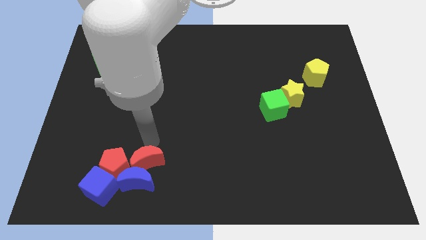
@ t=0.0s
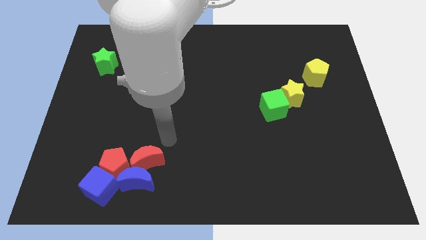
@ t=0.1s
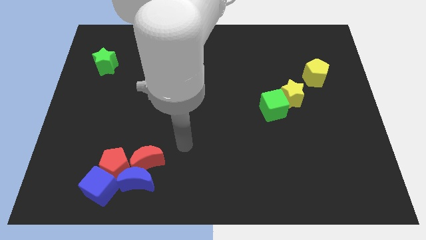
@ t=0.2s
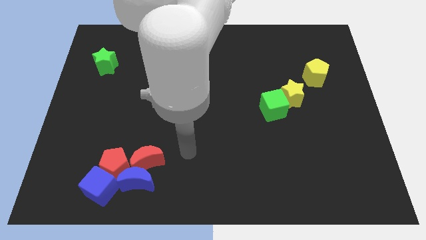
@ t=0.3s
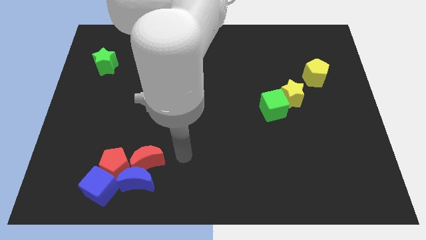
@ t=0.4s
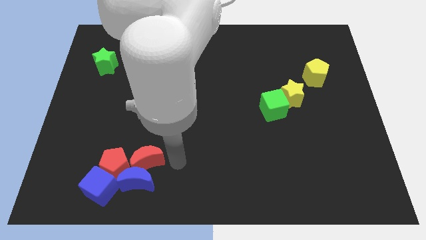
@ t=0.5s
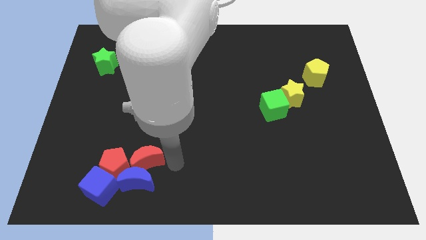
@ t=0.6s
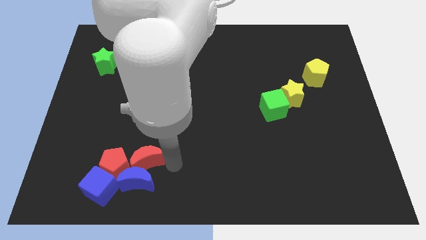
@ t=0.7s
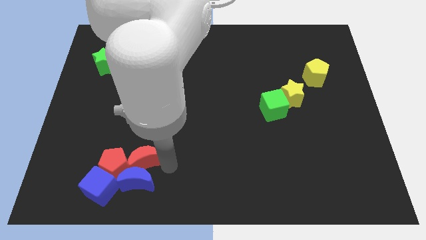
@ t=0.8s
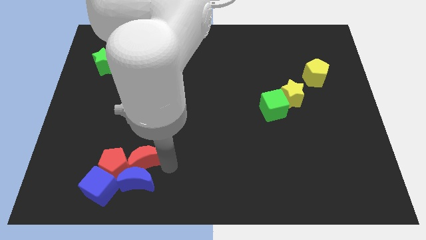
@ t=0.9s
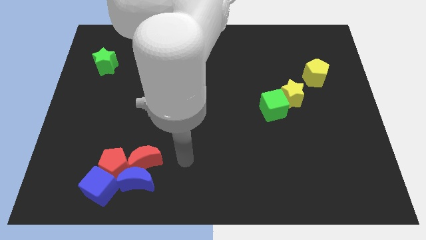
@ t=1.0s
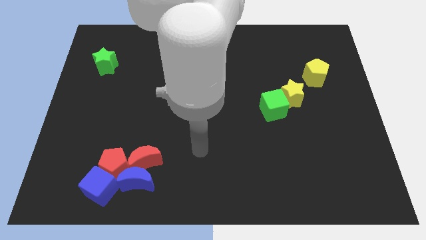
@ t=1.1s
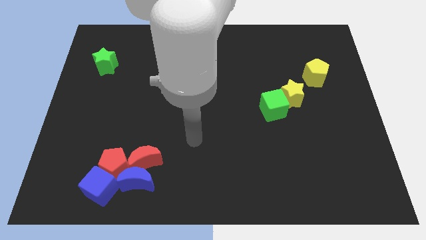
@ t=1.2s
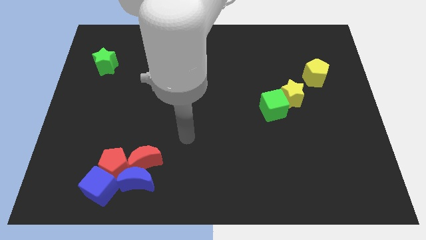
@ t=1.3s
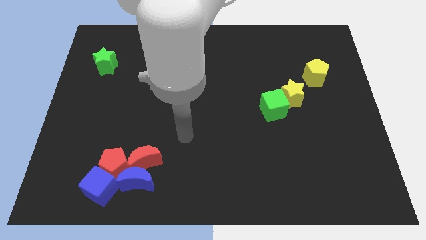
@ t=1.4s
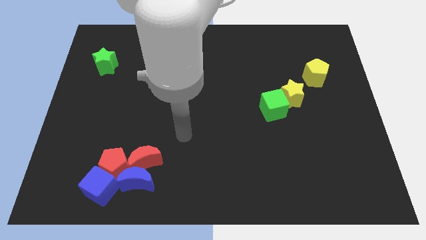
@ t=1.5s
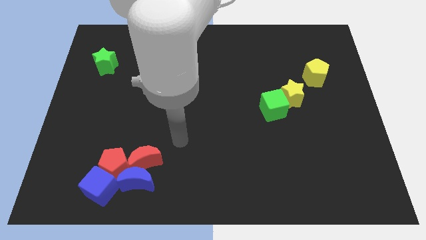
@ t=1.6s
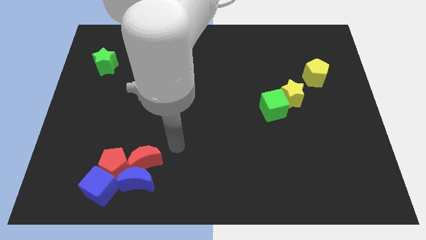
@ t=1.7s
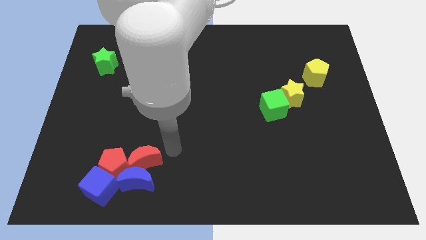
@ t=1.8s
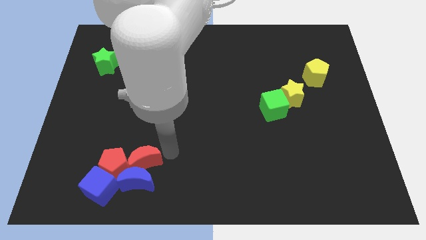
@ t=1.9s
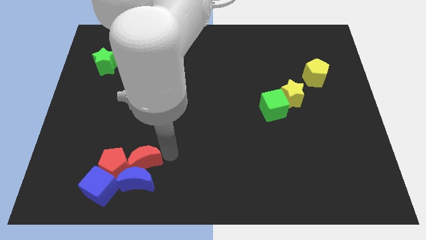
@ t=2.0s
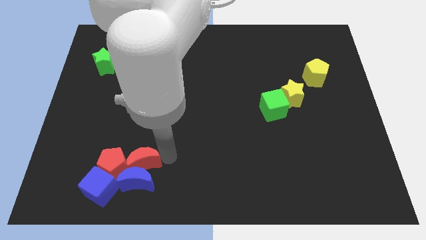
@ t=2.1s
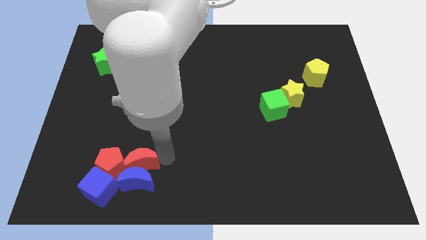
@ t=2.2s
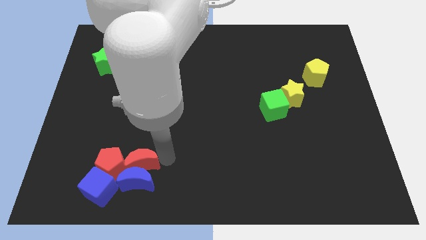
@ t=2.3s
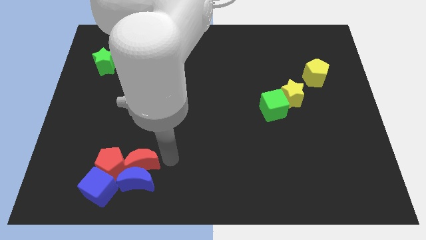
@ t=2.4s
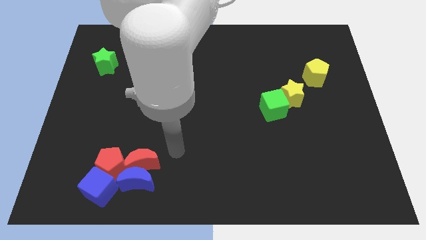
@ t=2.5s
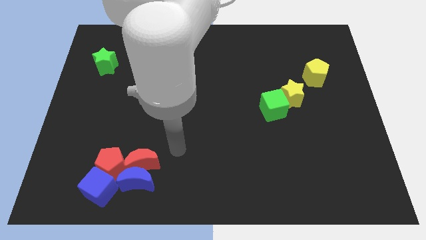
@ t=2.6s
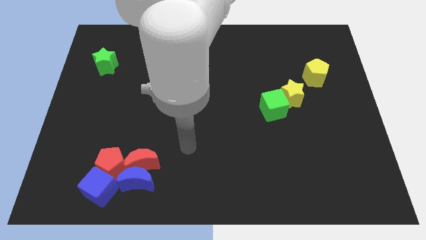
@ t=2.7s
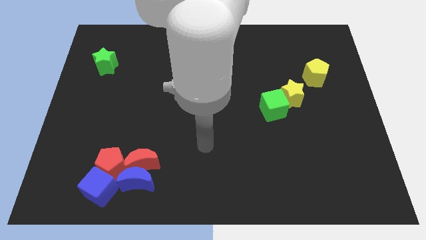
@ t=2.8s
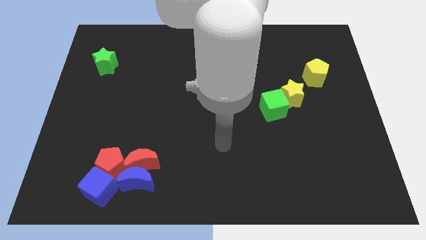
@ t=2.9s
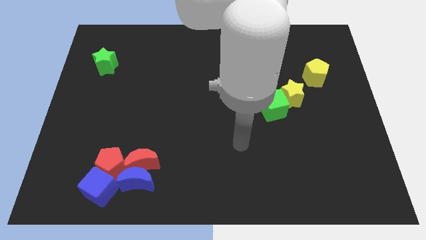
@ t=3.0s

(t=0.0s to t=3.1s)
slightly move red moon from the objects

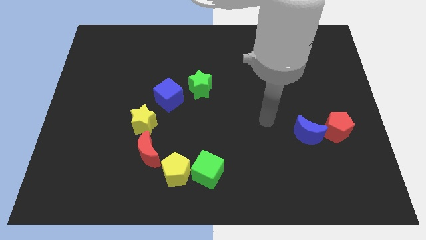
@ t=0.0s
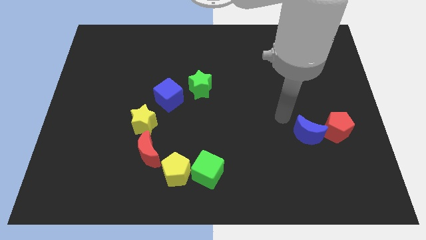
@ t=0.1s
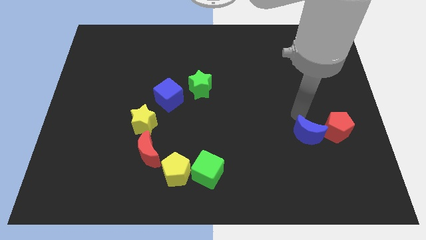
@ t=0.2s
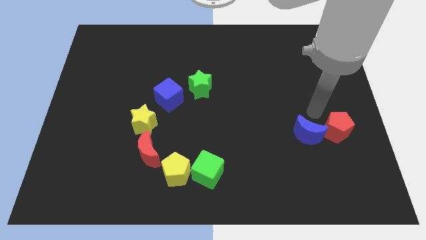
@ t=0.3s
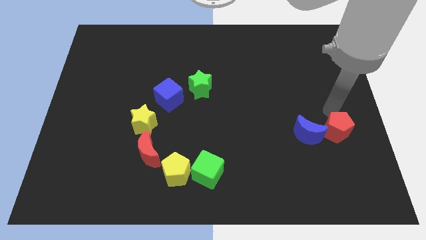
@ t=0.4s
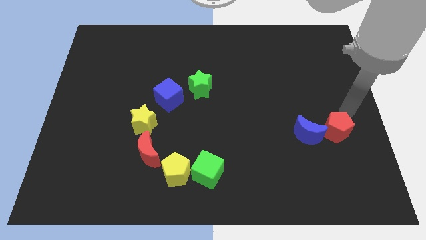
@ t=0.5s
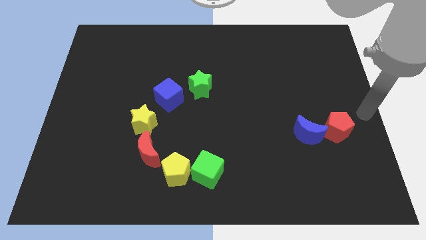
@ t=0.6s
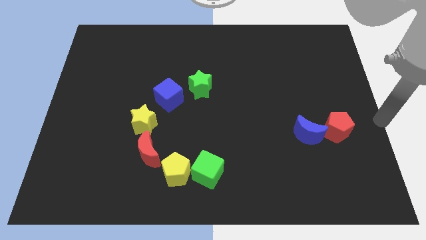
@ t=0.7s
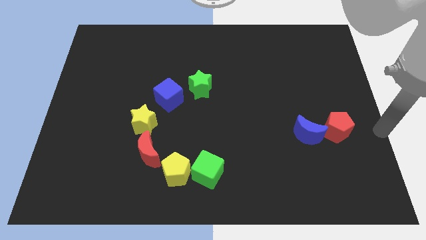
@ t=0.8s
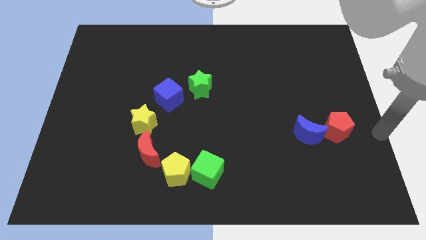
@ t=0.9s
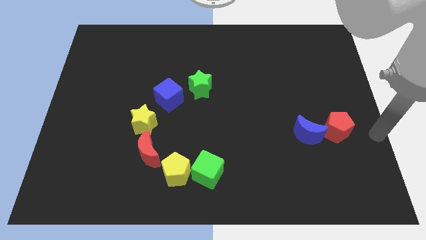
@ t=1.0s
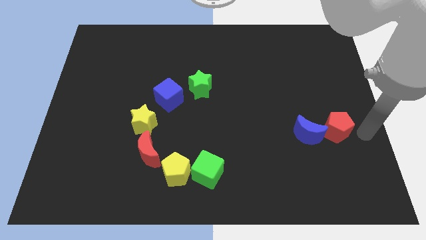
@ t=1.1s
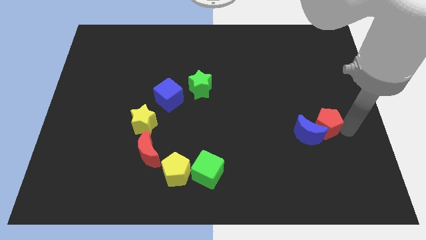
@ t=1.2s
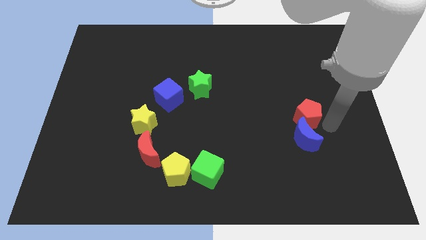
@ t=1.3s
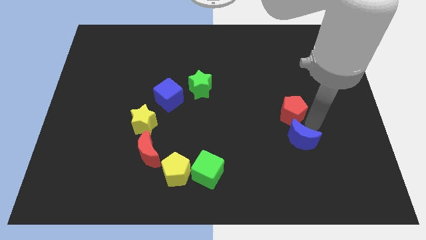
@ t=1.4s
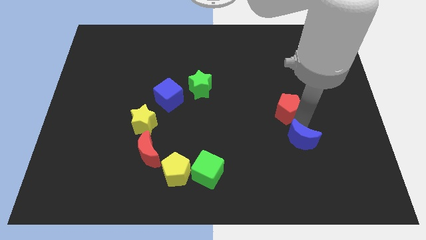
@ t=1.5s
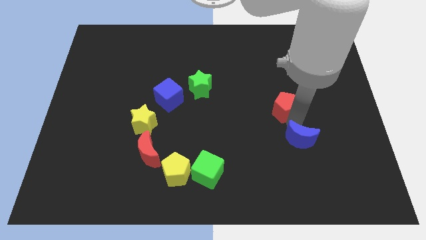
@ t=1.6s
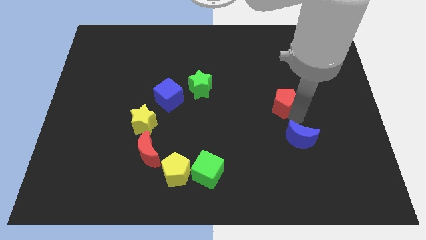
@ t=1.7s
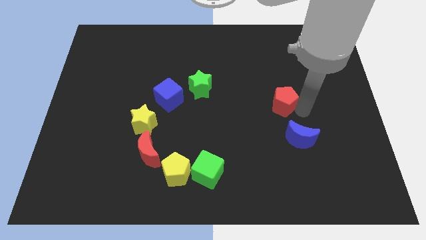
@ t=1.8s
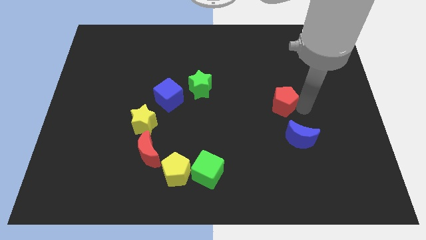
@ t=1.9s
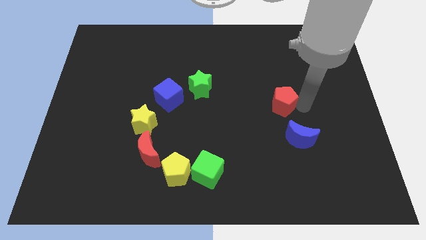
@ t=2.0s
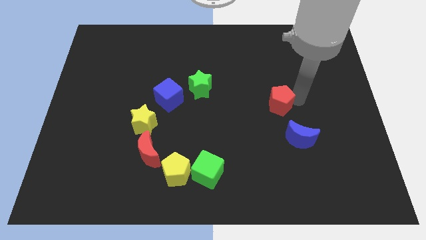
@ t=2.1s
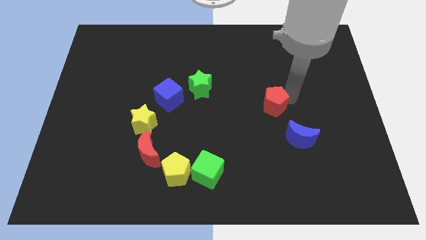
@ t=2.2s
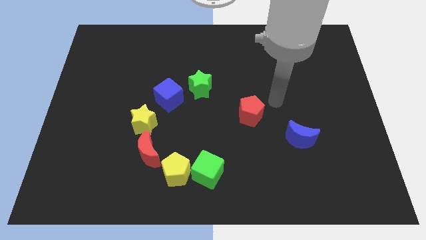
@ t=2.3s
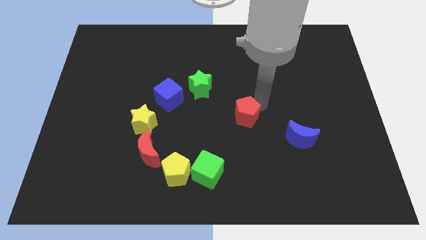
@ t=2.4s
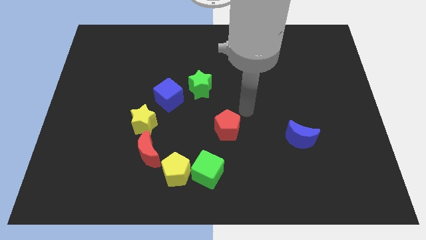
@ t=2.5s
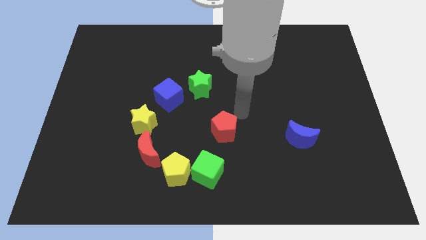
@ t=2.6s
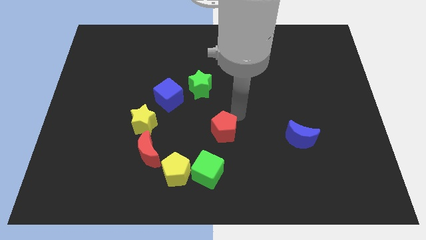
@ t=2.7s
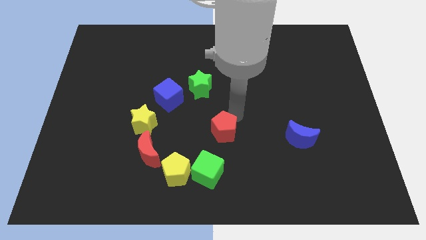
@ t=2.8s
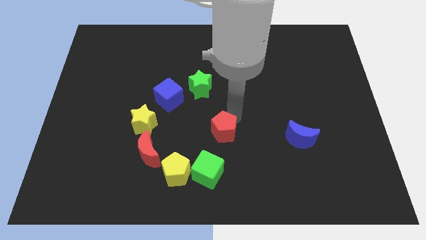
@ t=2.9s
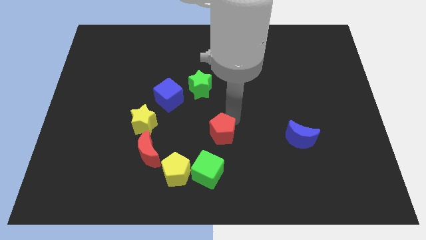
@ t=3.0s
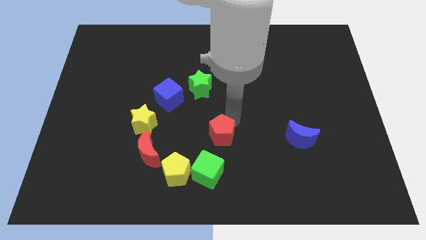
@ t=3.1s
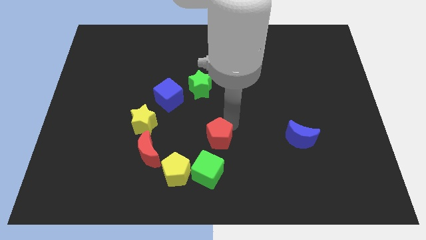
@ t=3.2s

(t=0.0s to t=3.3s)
push the red pentagon away from the blue crescent

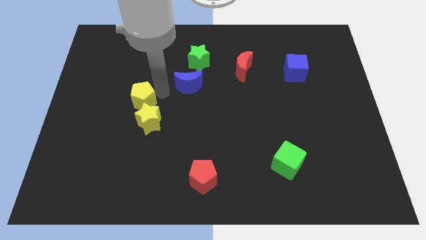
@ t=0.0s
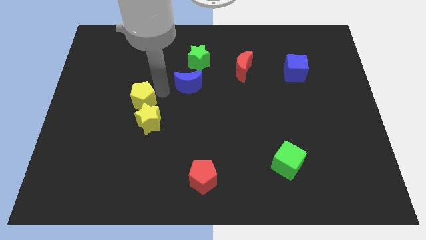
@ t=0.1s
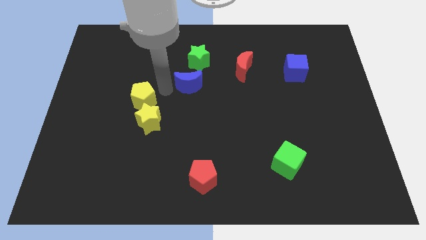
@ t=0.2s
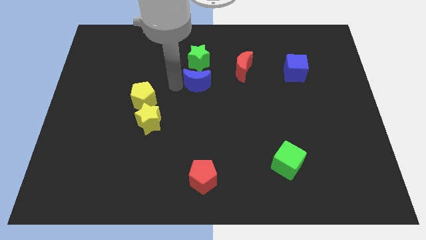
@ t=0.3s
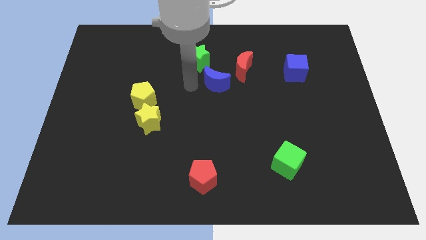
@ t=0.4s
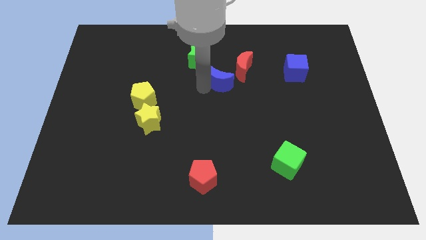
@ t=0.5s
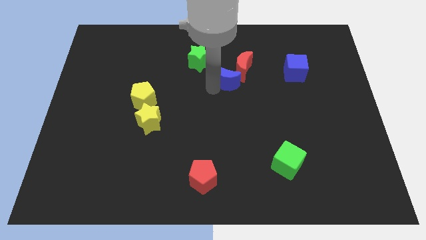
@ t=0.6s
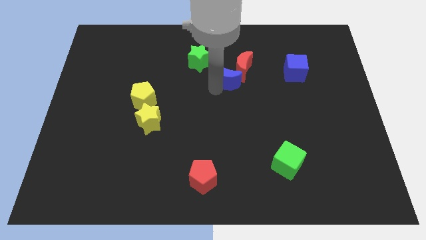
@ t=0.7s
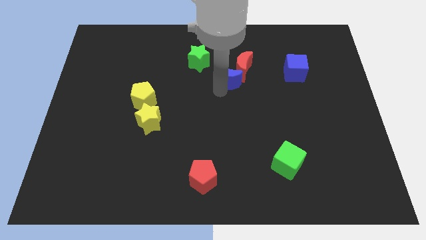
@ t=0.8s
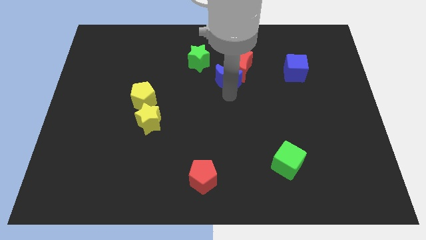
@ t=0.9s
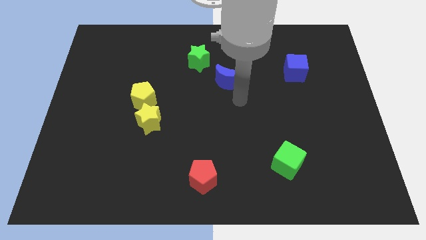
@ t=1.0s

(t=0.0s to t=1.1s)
push blue moon close to red moon

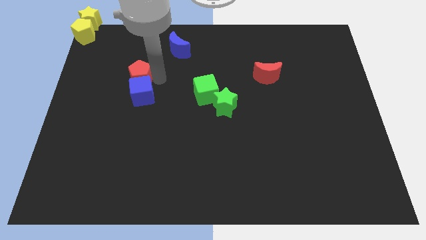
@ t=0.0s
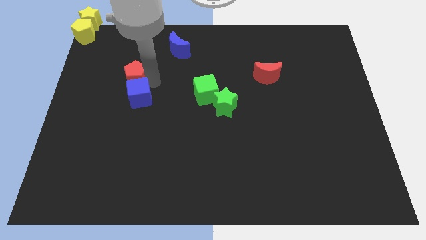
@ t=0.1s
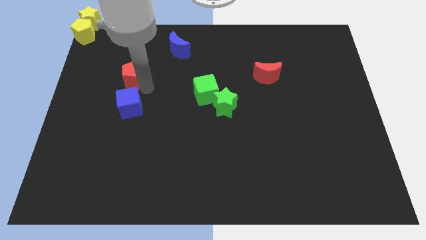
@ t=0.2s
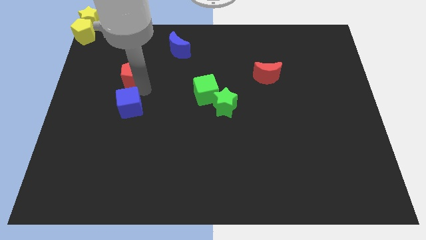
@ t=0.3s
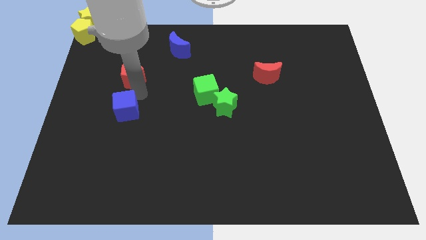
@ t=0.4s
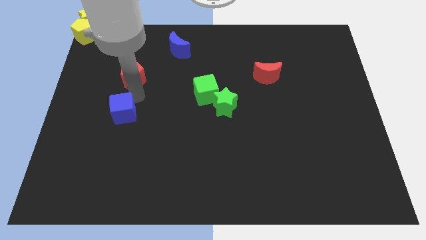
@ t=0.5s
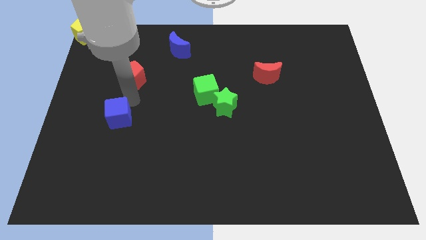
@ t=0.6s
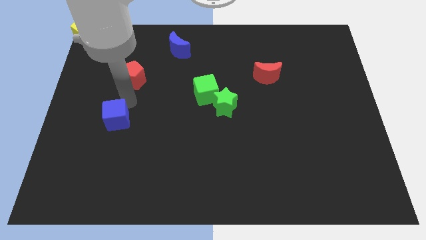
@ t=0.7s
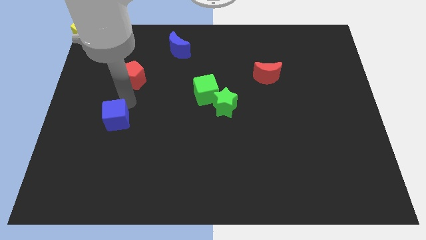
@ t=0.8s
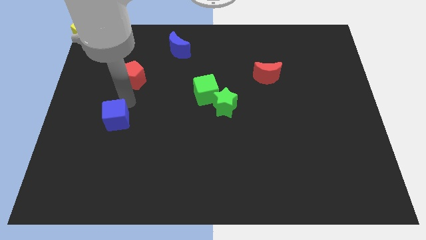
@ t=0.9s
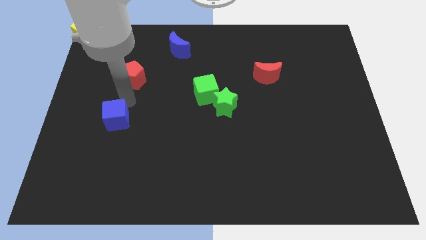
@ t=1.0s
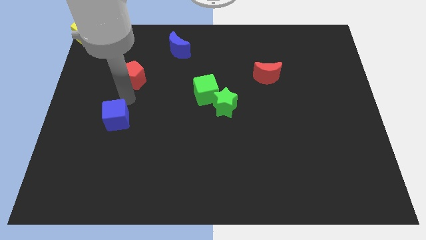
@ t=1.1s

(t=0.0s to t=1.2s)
separate the blue cube and the red pentagon

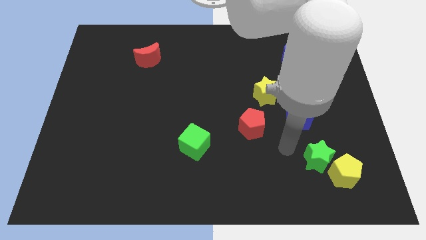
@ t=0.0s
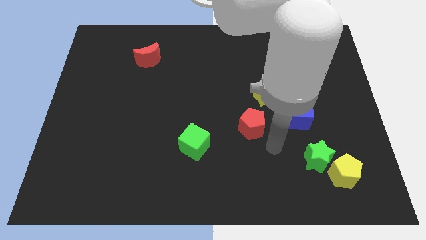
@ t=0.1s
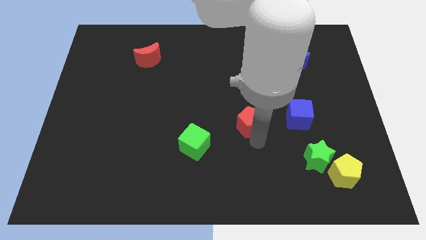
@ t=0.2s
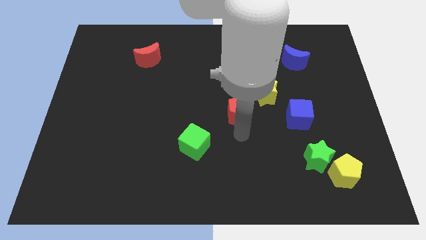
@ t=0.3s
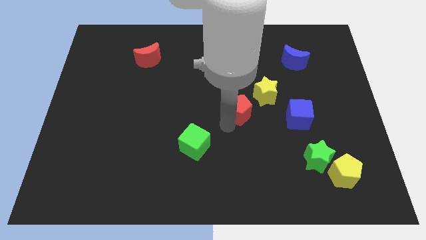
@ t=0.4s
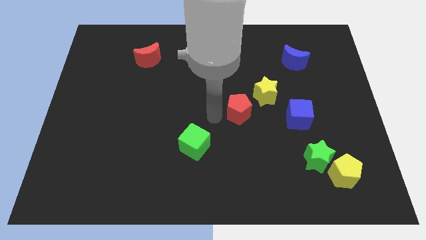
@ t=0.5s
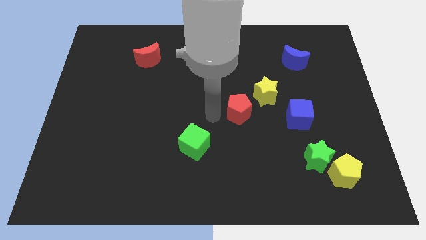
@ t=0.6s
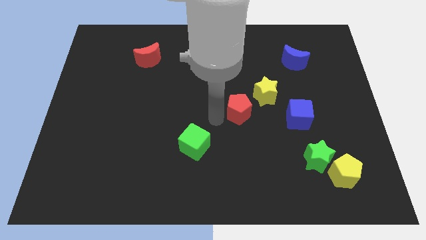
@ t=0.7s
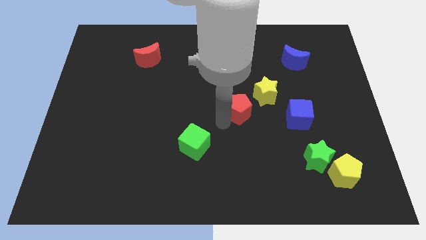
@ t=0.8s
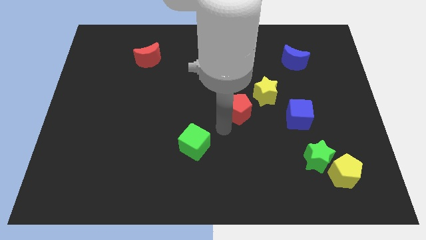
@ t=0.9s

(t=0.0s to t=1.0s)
move red pentagon left to the blue cube
